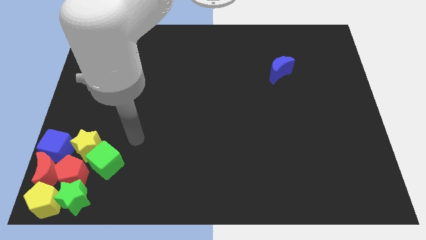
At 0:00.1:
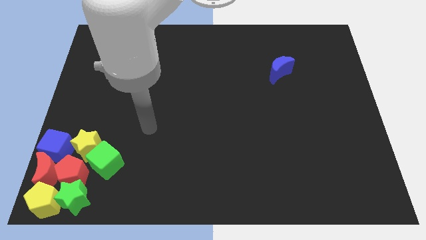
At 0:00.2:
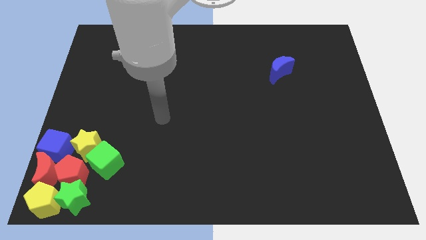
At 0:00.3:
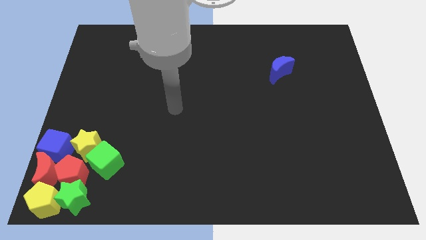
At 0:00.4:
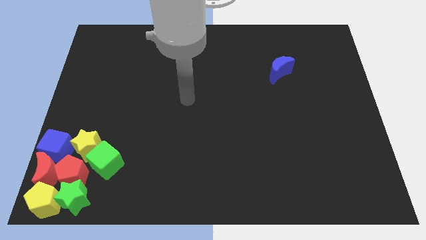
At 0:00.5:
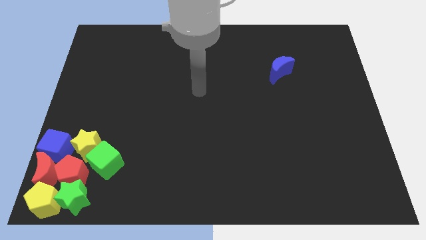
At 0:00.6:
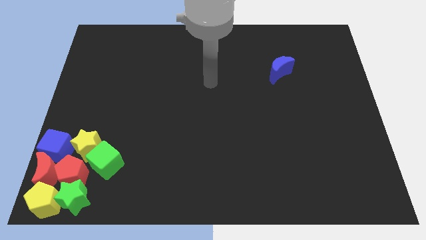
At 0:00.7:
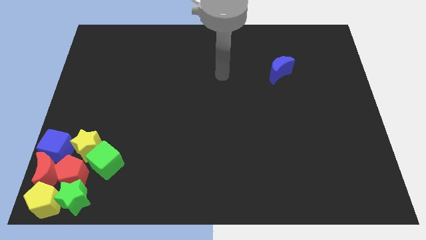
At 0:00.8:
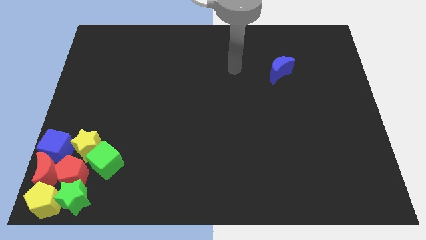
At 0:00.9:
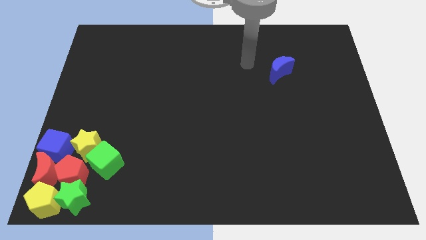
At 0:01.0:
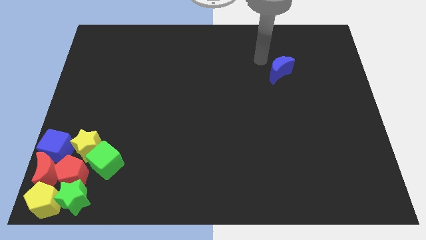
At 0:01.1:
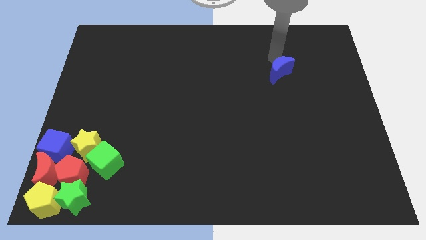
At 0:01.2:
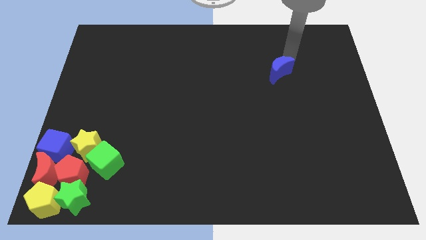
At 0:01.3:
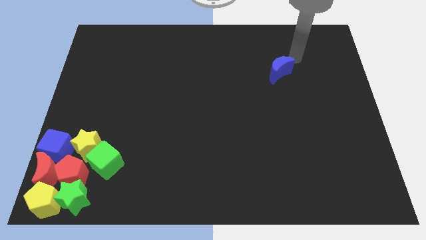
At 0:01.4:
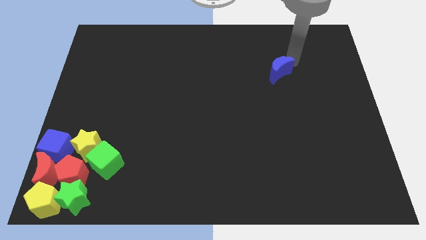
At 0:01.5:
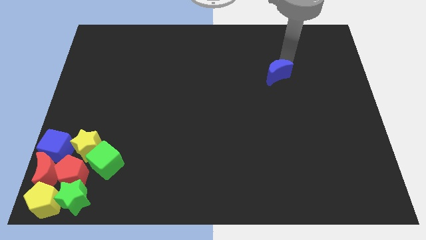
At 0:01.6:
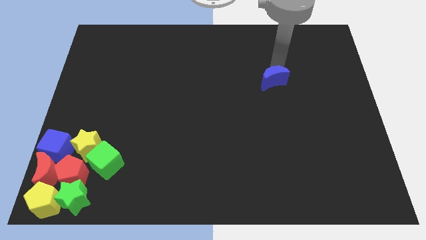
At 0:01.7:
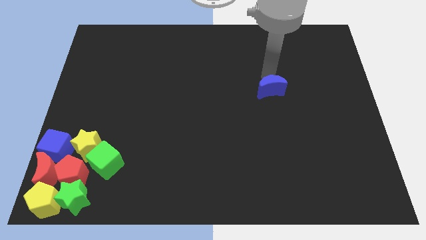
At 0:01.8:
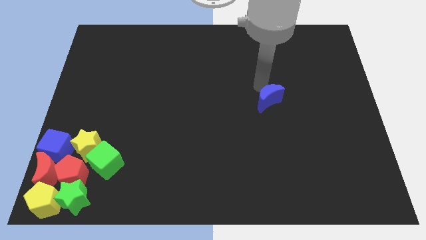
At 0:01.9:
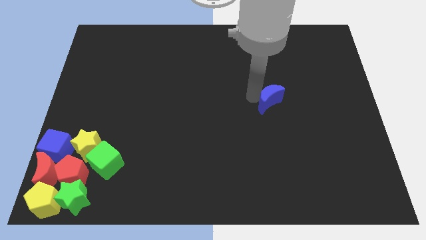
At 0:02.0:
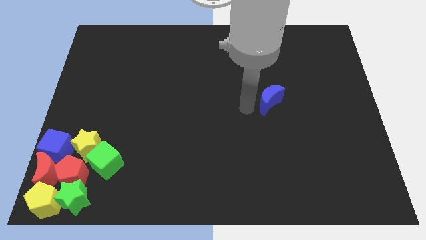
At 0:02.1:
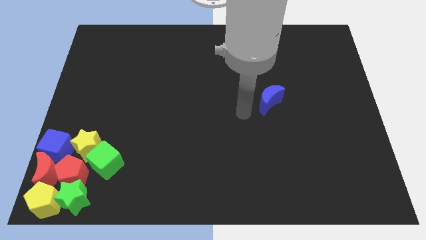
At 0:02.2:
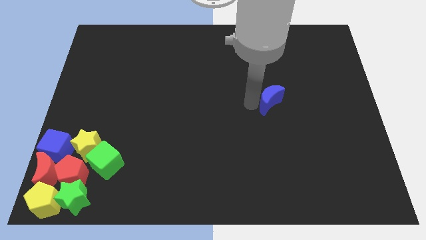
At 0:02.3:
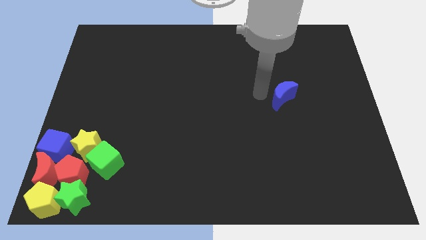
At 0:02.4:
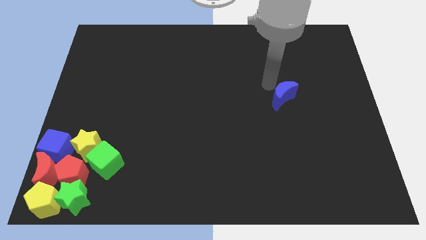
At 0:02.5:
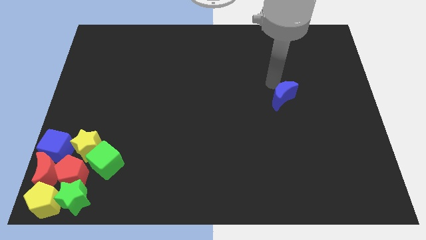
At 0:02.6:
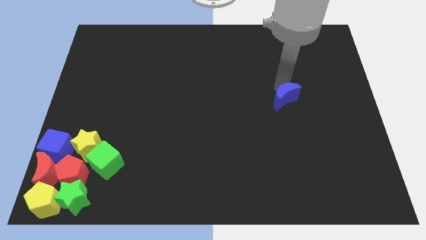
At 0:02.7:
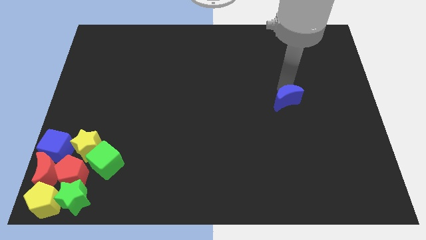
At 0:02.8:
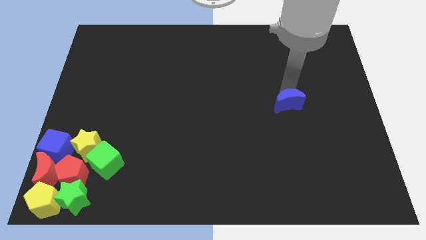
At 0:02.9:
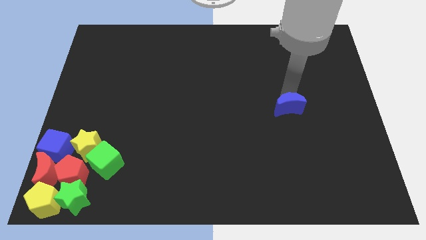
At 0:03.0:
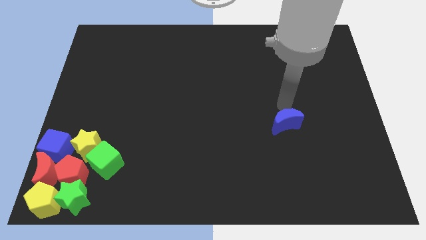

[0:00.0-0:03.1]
push the blue crescent towards the bottom side of the board

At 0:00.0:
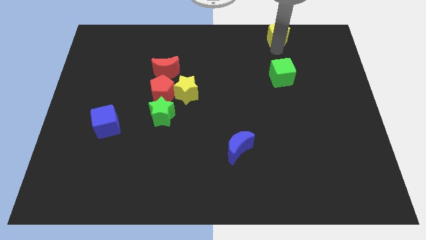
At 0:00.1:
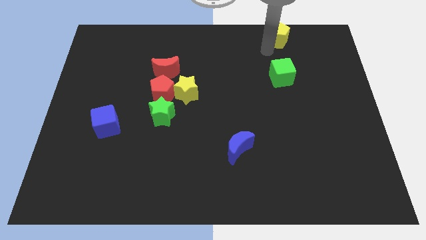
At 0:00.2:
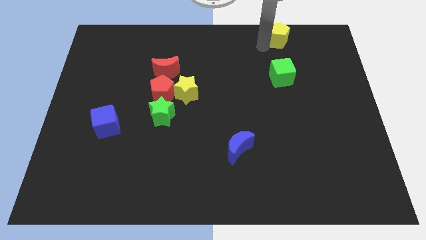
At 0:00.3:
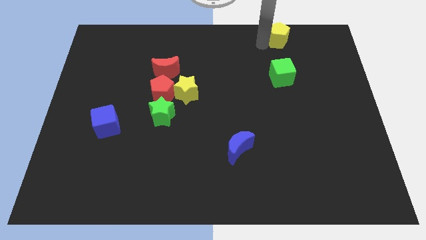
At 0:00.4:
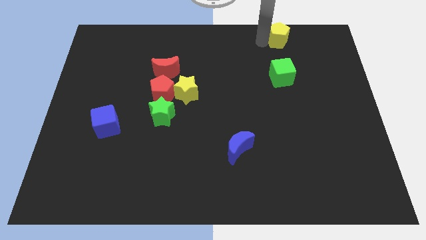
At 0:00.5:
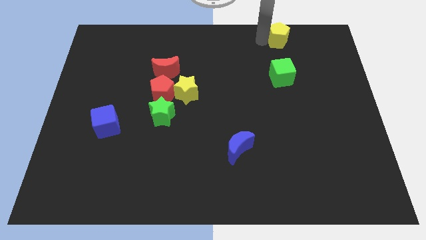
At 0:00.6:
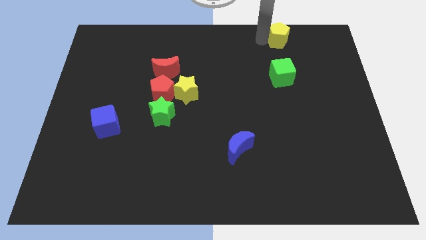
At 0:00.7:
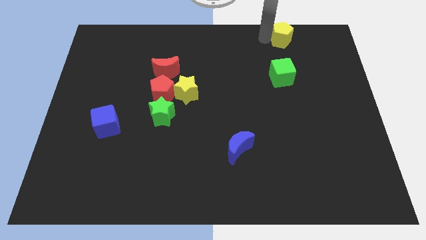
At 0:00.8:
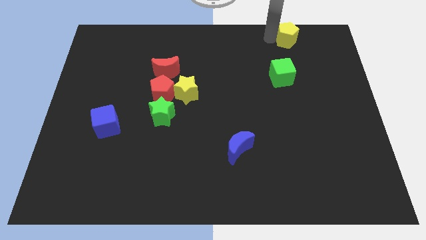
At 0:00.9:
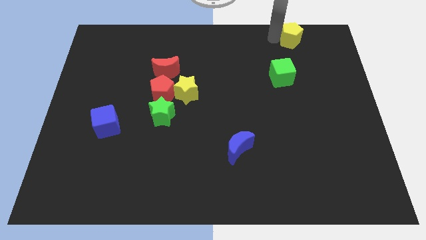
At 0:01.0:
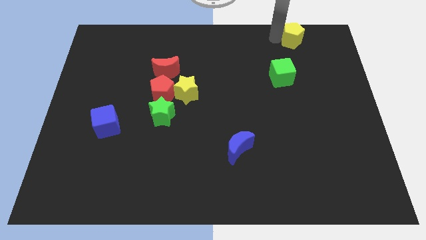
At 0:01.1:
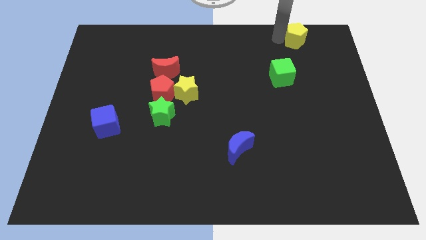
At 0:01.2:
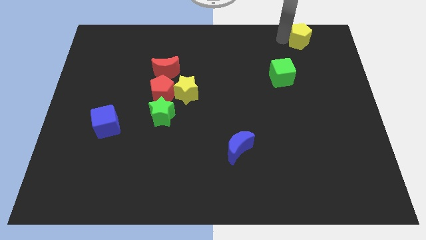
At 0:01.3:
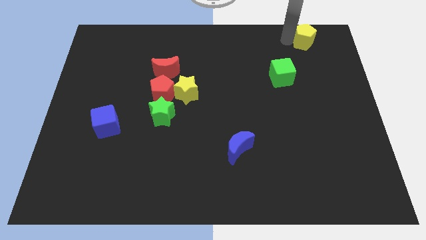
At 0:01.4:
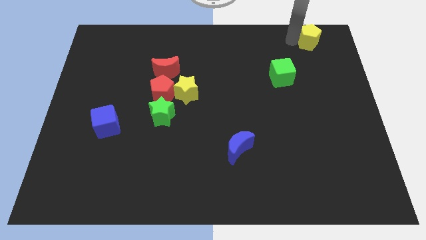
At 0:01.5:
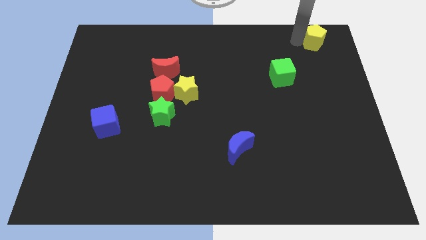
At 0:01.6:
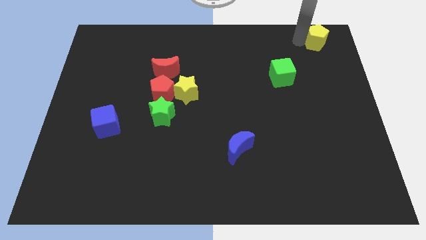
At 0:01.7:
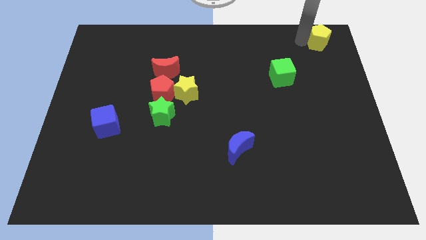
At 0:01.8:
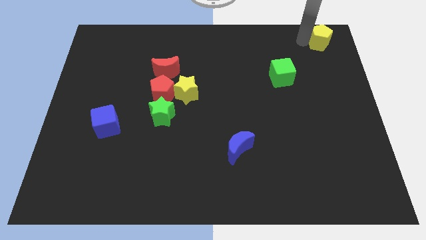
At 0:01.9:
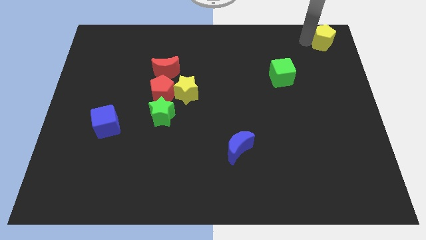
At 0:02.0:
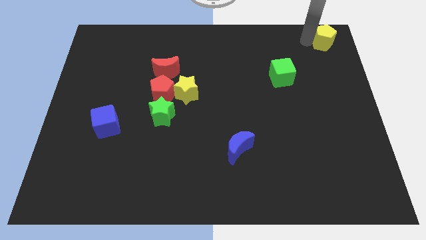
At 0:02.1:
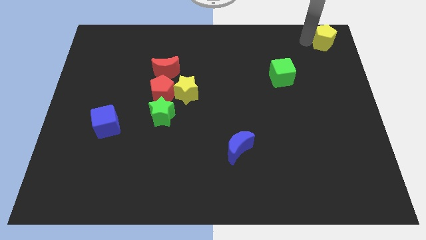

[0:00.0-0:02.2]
place the yellow pentagon at the top right corner

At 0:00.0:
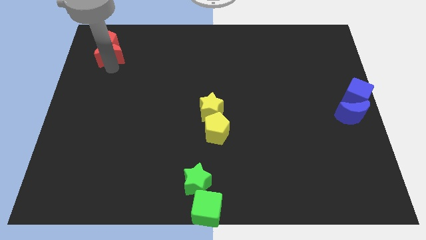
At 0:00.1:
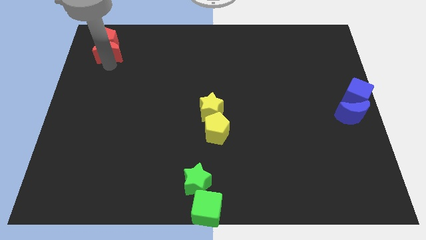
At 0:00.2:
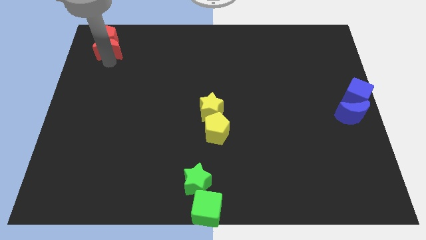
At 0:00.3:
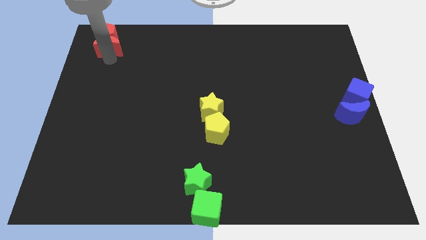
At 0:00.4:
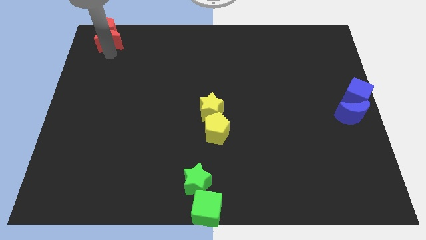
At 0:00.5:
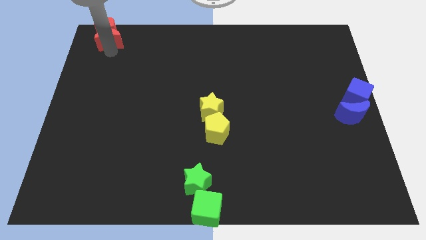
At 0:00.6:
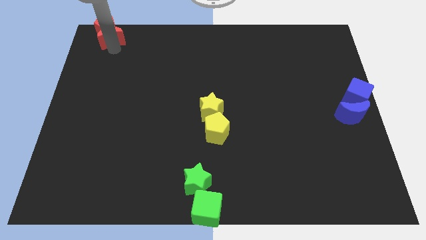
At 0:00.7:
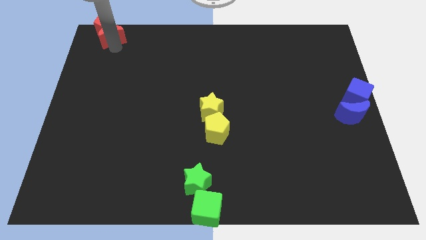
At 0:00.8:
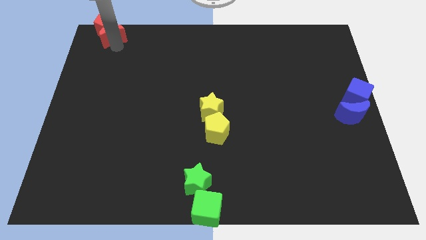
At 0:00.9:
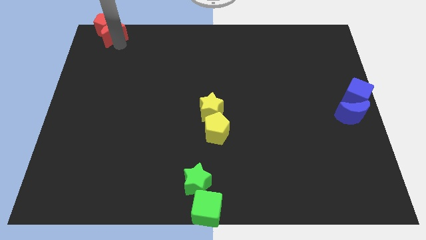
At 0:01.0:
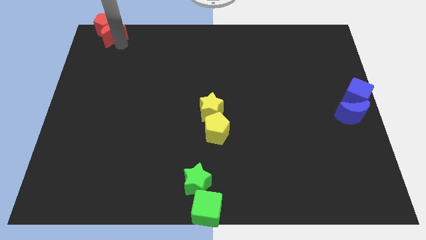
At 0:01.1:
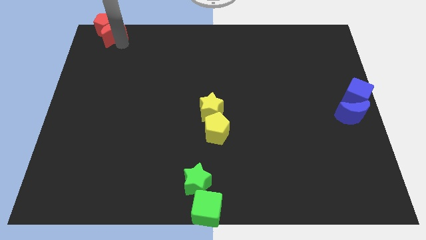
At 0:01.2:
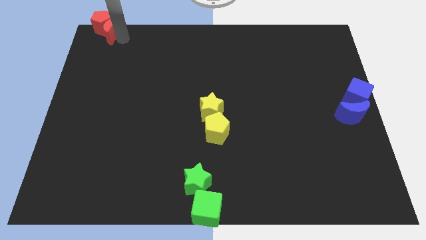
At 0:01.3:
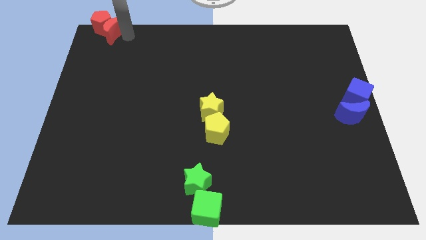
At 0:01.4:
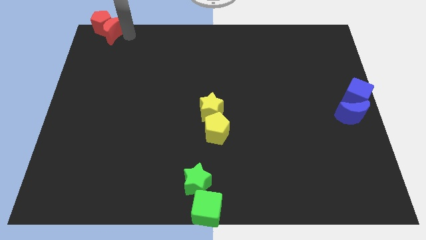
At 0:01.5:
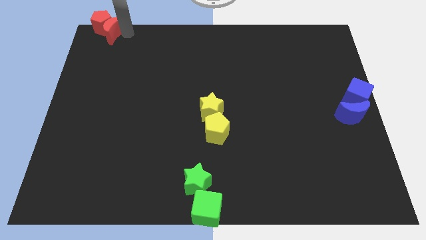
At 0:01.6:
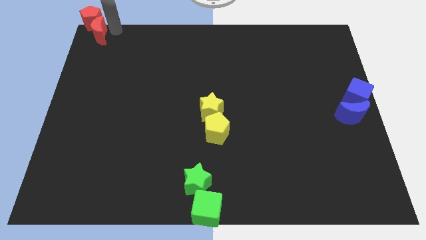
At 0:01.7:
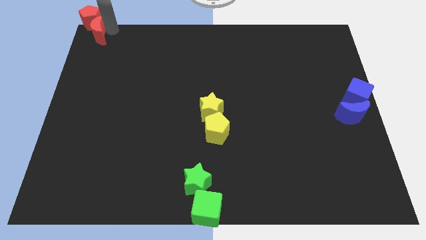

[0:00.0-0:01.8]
push the red pentagon and the red moon to the top left side

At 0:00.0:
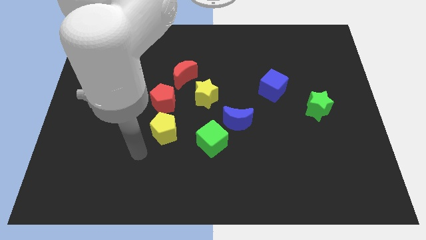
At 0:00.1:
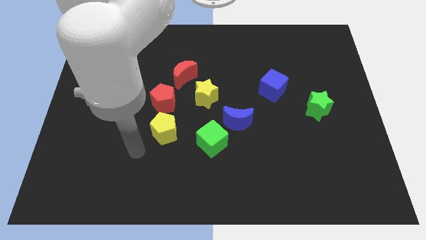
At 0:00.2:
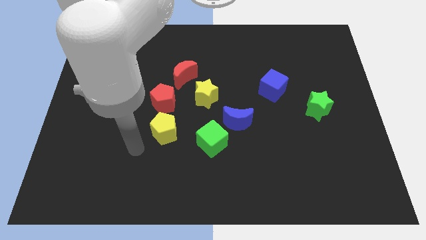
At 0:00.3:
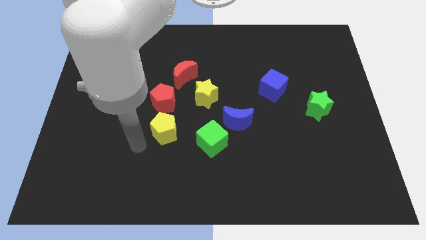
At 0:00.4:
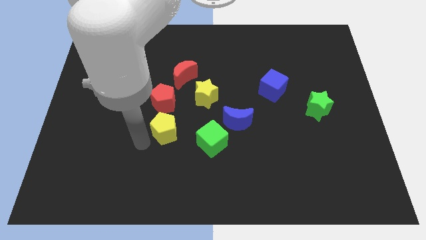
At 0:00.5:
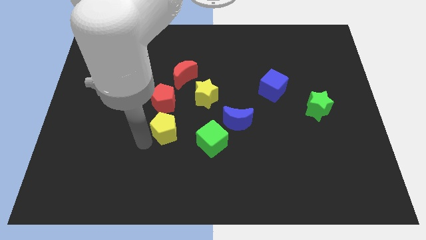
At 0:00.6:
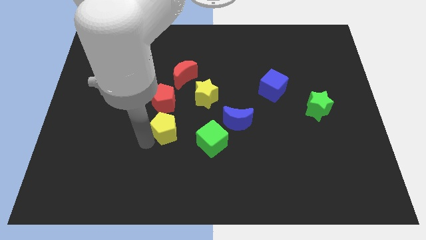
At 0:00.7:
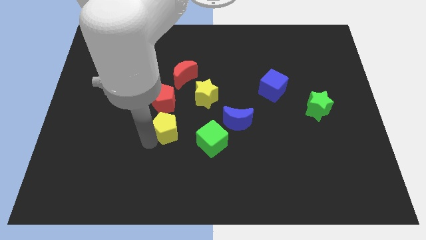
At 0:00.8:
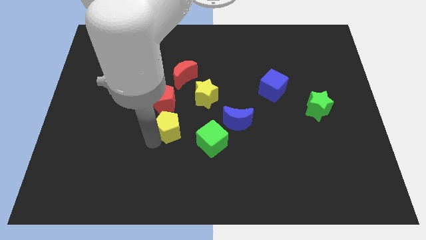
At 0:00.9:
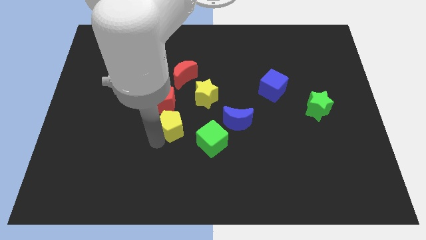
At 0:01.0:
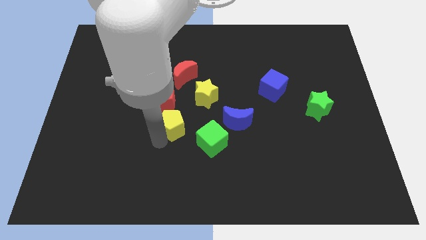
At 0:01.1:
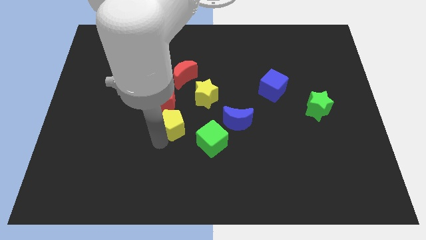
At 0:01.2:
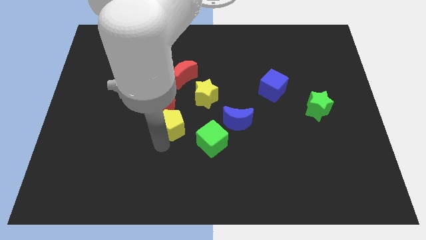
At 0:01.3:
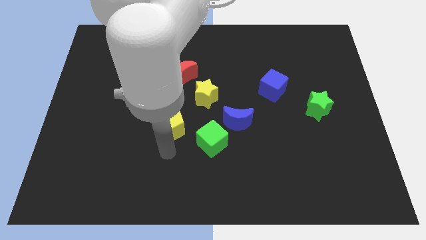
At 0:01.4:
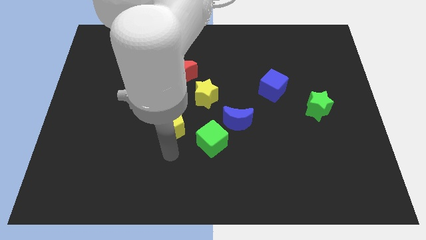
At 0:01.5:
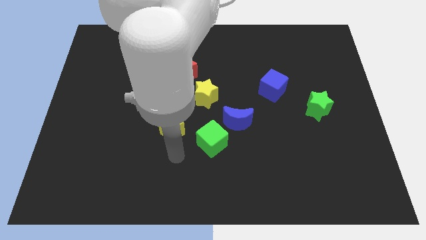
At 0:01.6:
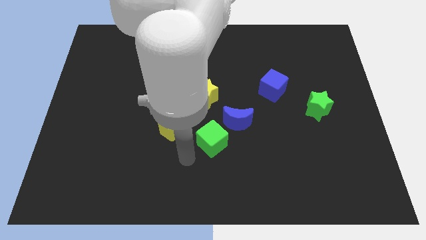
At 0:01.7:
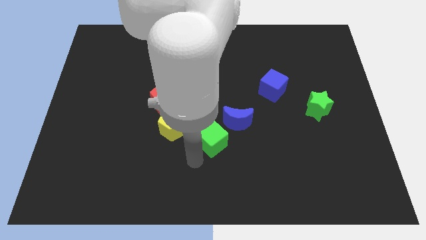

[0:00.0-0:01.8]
slightly push the yellow pentagon to the right
